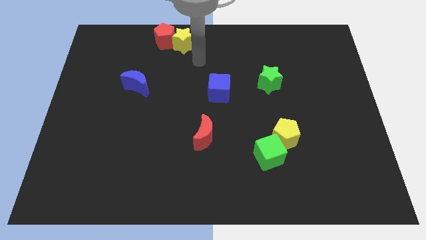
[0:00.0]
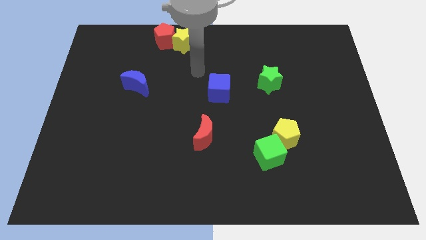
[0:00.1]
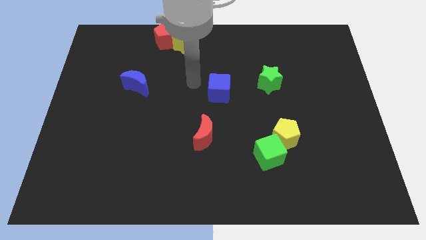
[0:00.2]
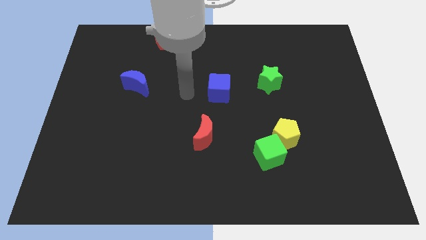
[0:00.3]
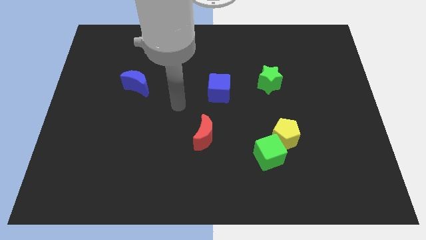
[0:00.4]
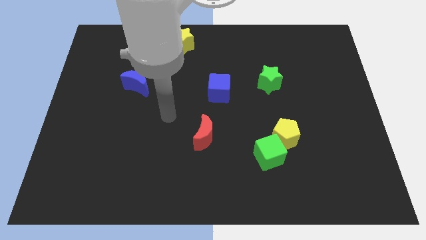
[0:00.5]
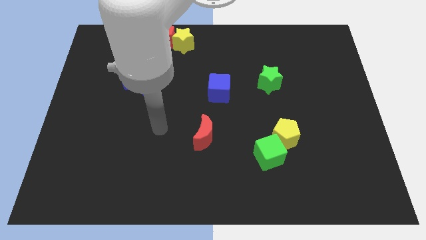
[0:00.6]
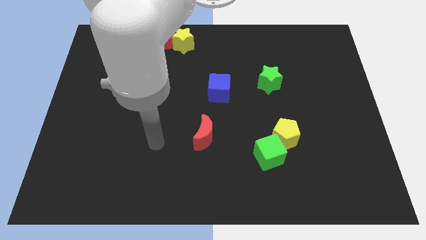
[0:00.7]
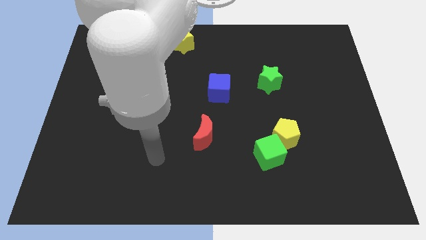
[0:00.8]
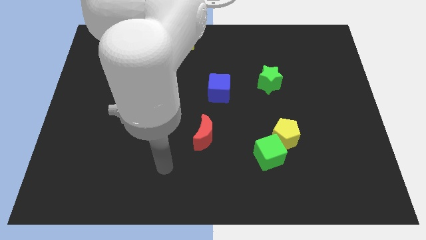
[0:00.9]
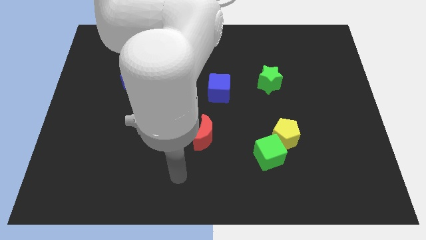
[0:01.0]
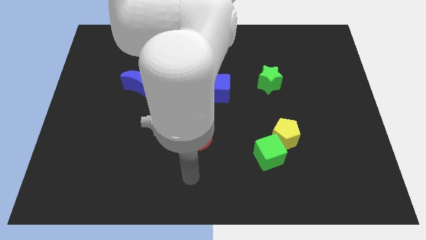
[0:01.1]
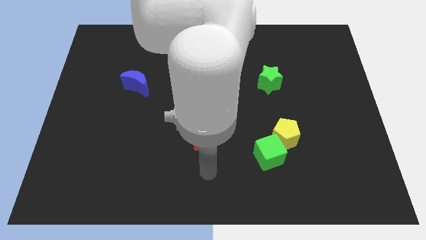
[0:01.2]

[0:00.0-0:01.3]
move your arm towards the red moon

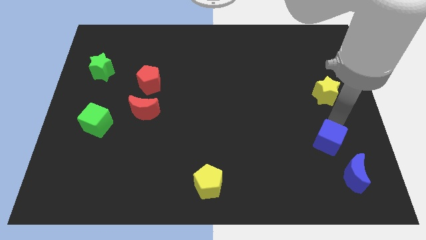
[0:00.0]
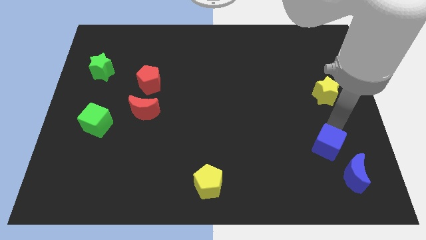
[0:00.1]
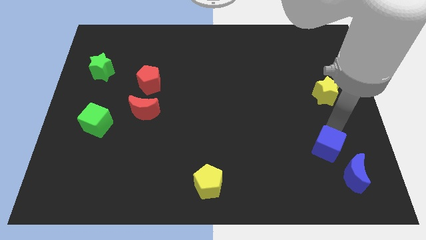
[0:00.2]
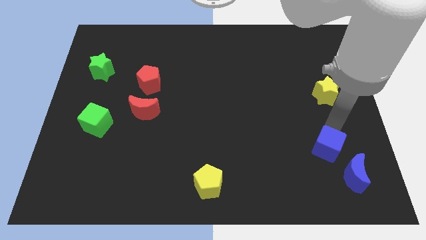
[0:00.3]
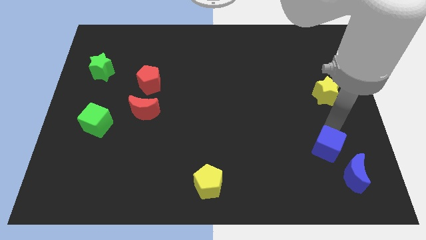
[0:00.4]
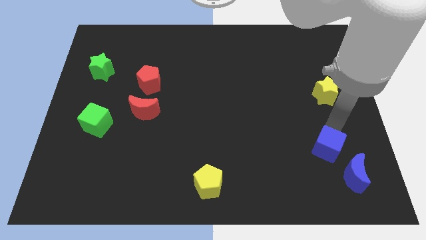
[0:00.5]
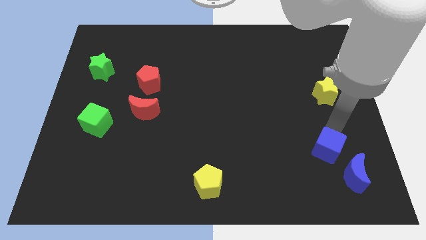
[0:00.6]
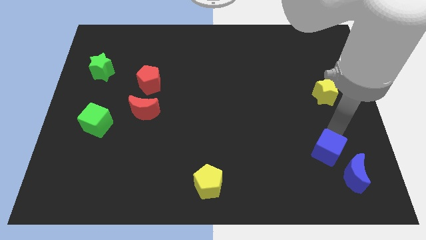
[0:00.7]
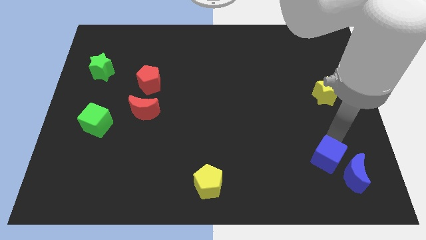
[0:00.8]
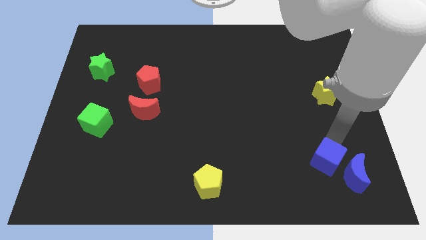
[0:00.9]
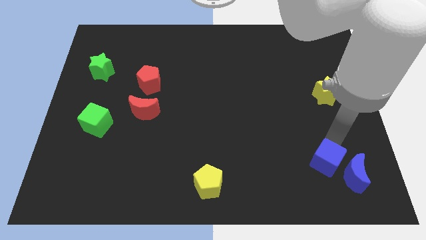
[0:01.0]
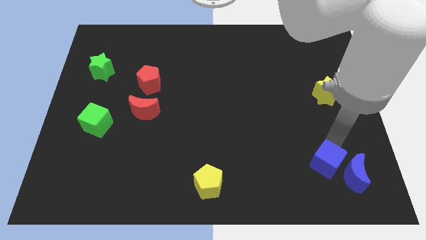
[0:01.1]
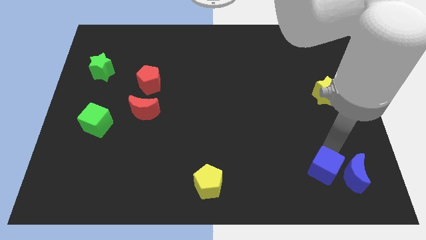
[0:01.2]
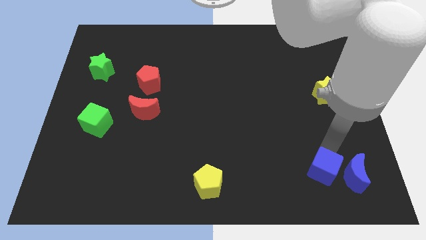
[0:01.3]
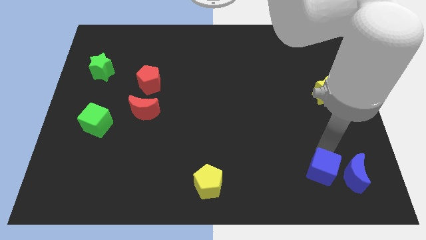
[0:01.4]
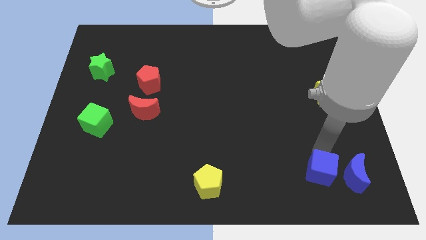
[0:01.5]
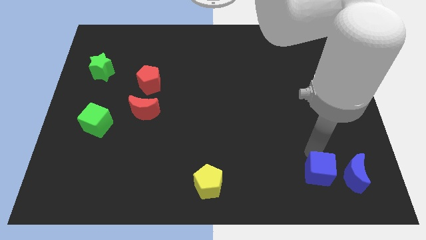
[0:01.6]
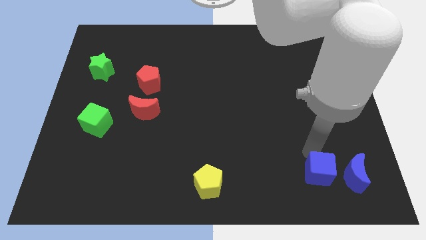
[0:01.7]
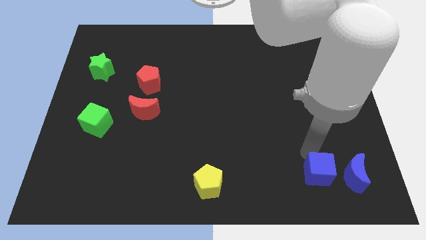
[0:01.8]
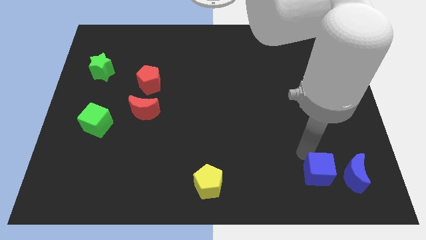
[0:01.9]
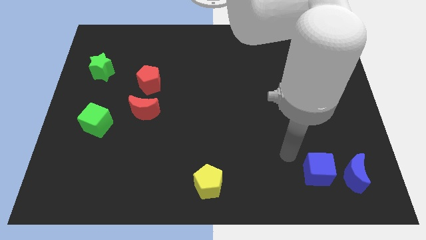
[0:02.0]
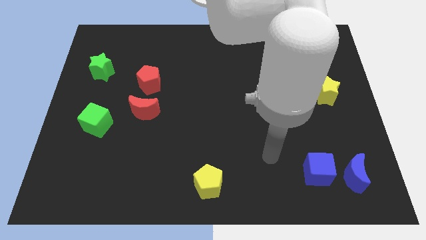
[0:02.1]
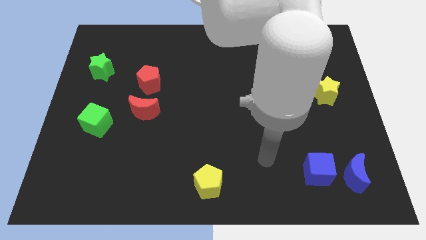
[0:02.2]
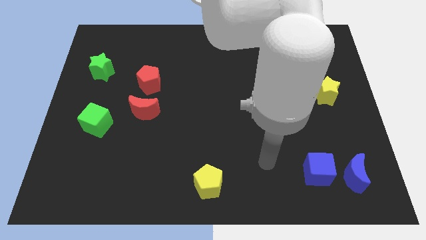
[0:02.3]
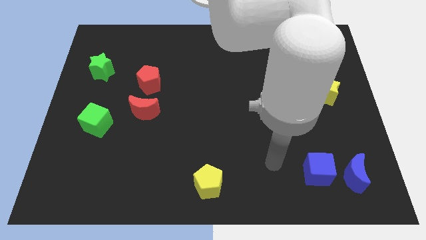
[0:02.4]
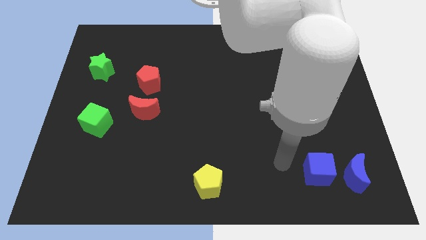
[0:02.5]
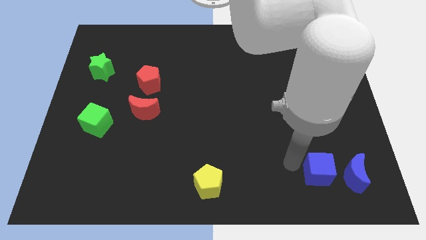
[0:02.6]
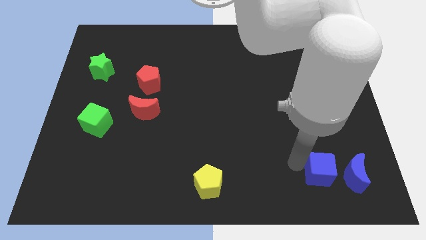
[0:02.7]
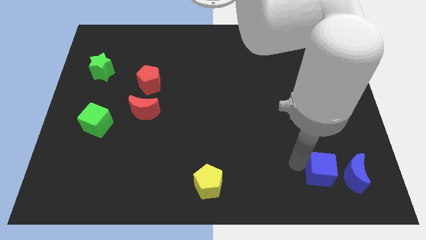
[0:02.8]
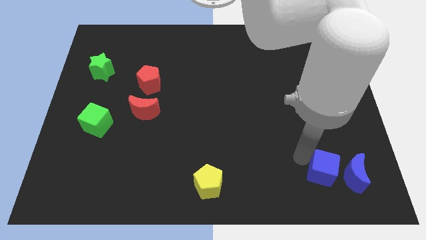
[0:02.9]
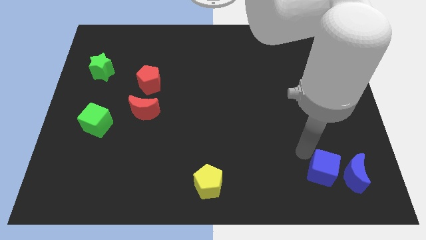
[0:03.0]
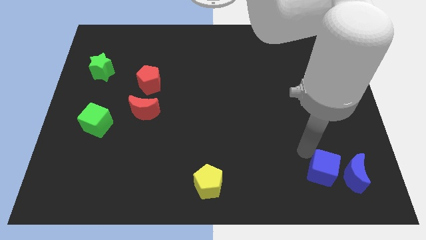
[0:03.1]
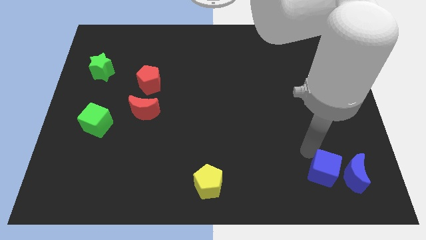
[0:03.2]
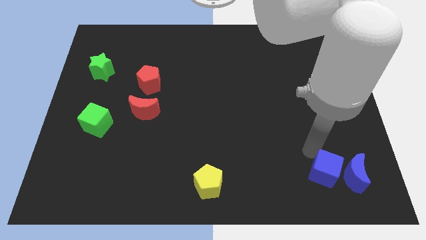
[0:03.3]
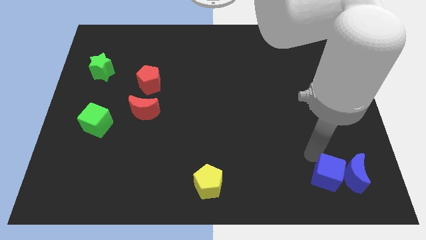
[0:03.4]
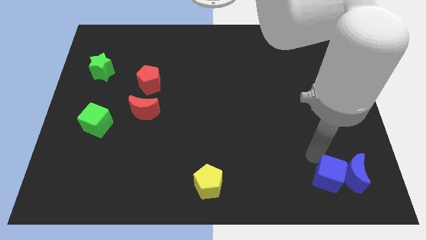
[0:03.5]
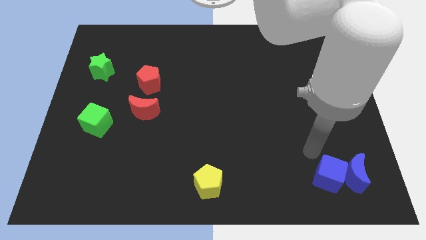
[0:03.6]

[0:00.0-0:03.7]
push blue cube into blue moon

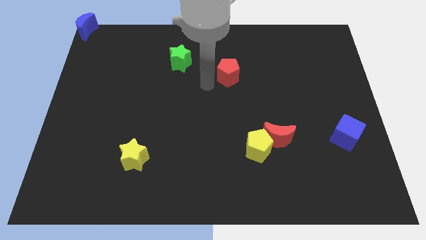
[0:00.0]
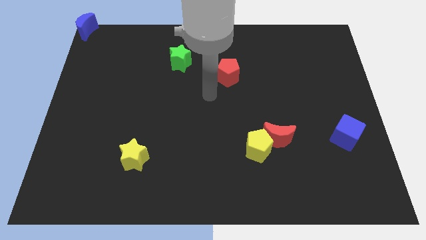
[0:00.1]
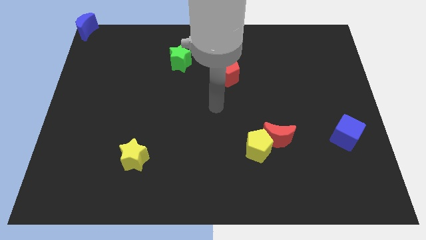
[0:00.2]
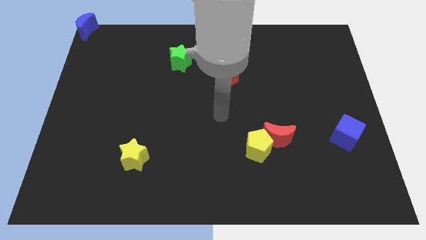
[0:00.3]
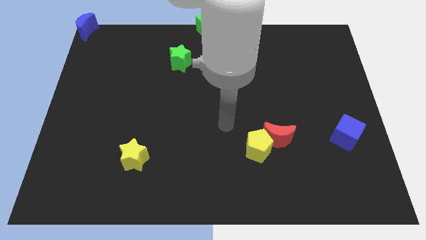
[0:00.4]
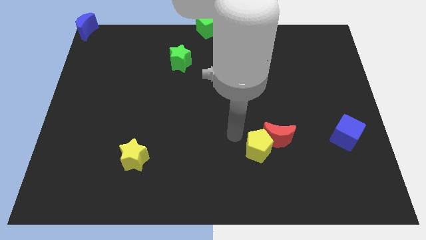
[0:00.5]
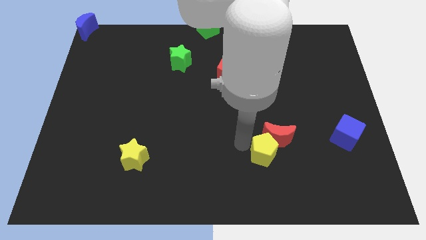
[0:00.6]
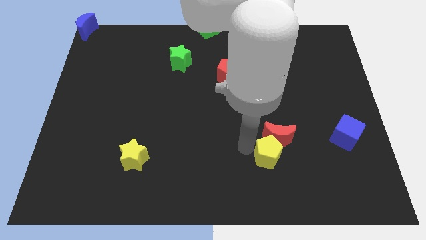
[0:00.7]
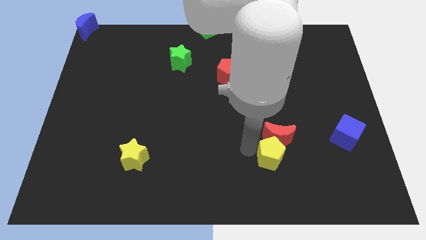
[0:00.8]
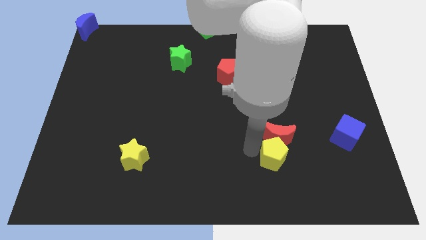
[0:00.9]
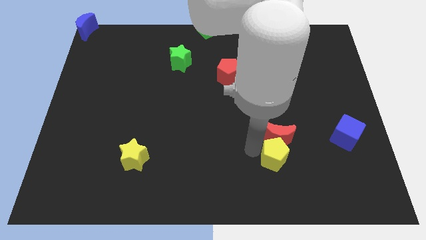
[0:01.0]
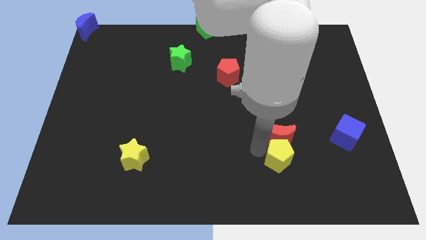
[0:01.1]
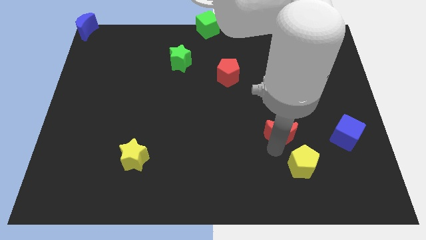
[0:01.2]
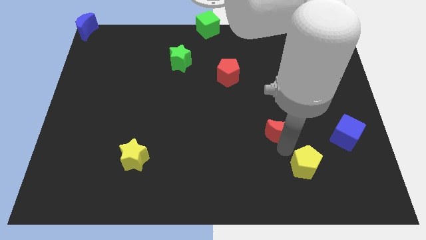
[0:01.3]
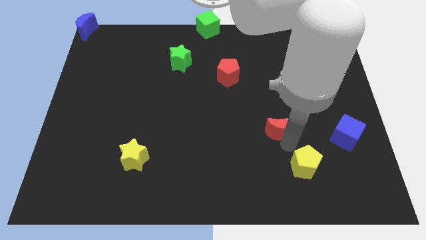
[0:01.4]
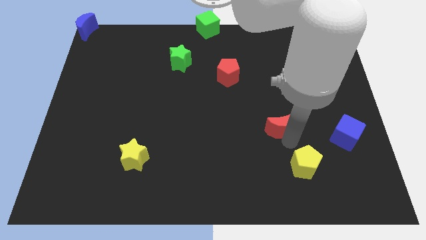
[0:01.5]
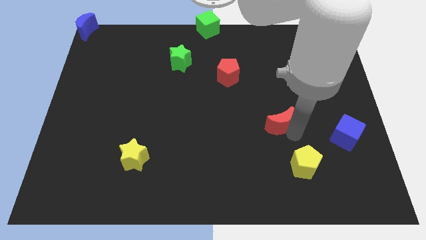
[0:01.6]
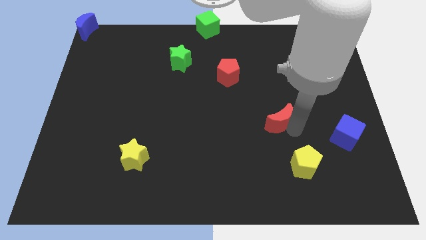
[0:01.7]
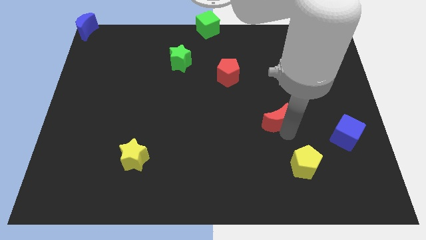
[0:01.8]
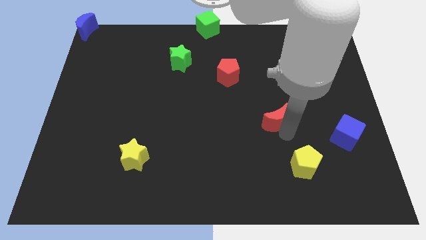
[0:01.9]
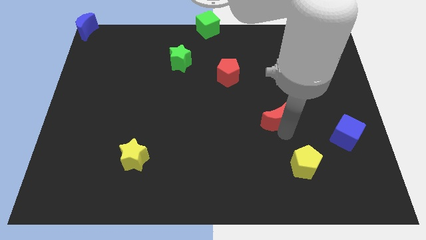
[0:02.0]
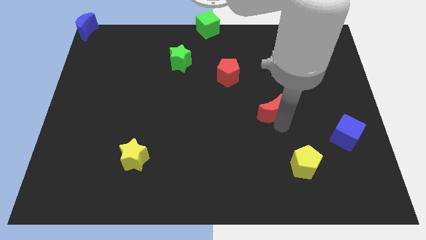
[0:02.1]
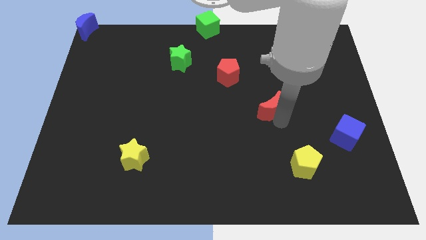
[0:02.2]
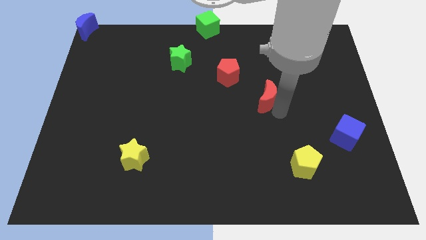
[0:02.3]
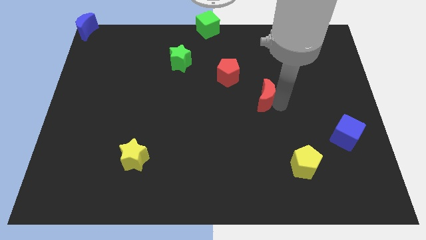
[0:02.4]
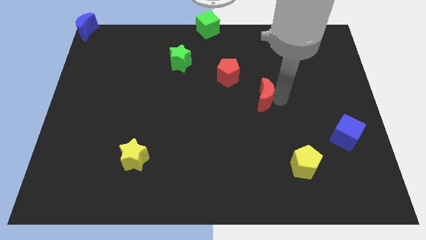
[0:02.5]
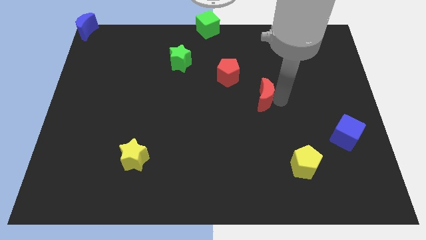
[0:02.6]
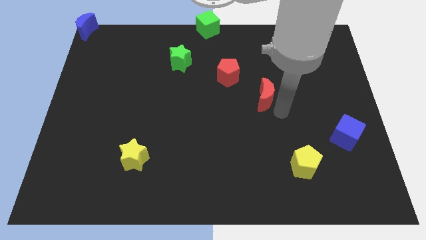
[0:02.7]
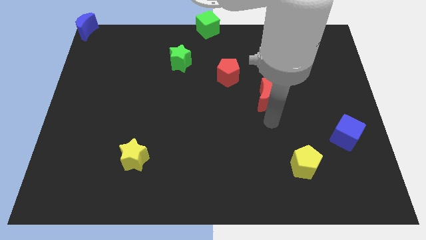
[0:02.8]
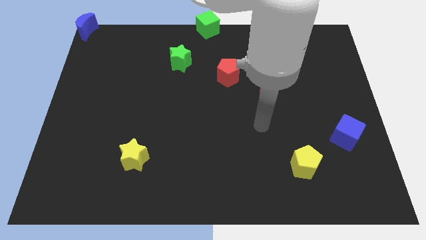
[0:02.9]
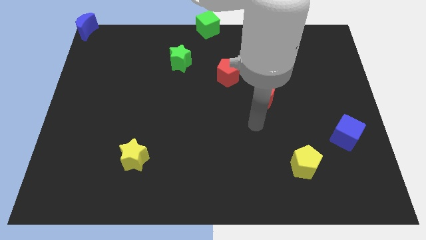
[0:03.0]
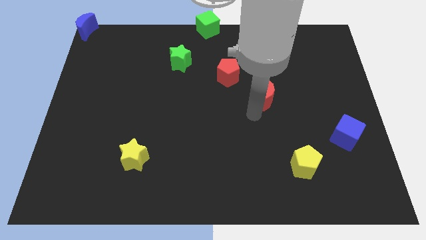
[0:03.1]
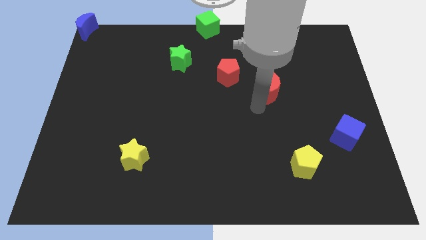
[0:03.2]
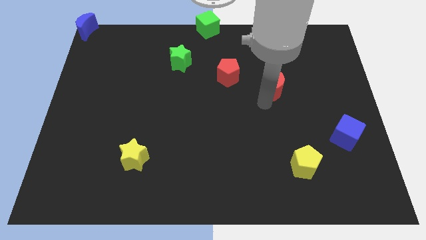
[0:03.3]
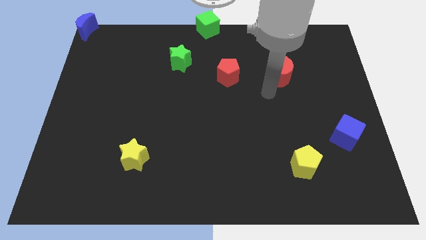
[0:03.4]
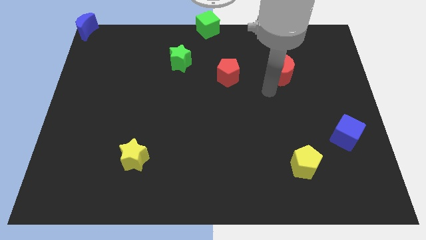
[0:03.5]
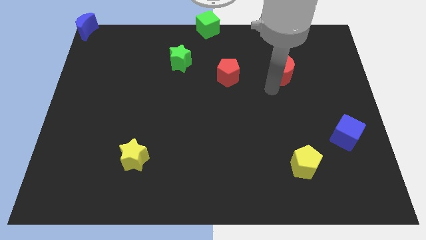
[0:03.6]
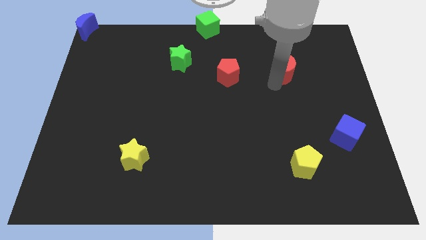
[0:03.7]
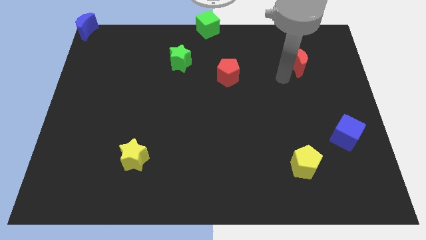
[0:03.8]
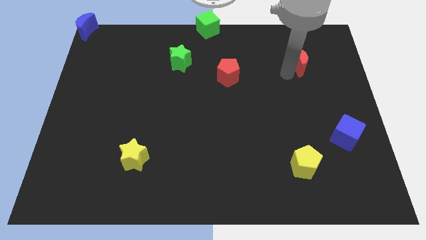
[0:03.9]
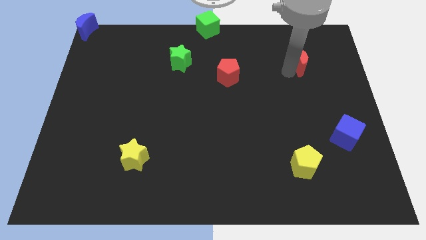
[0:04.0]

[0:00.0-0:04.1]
separate red moon and yellow pentagon from each other
